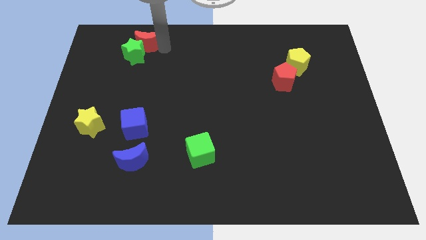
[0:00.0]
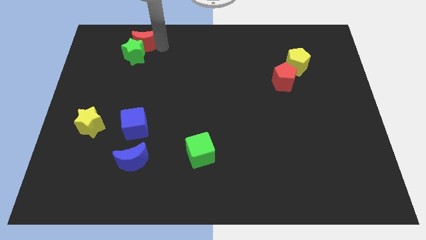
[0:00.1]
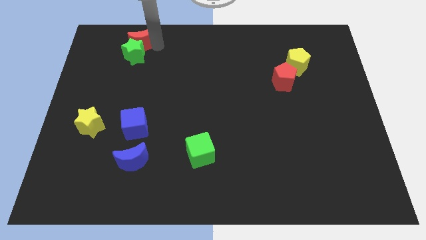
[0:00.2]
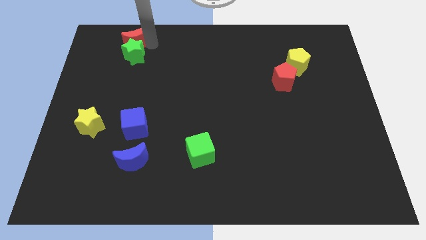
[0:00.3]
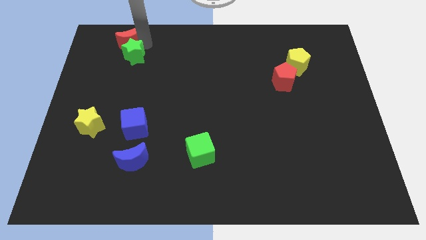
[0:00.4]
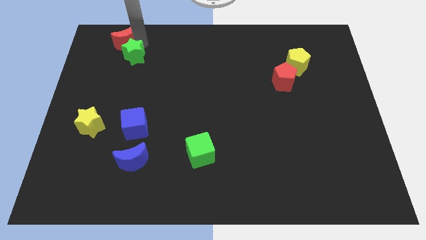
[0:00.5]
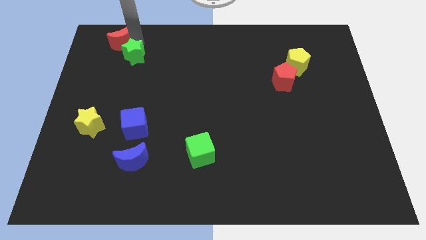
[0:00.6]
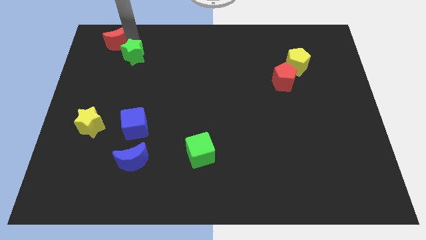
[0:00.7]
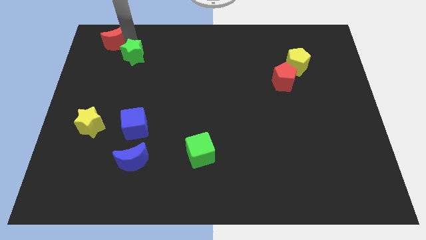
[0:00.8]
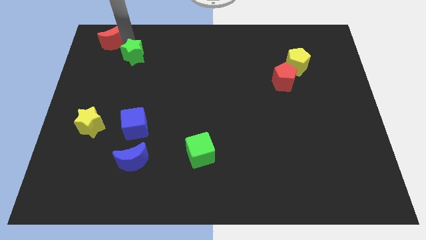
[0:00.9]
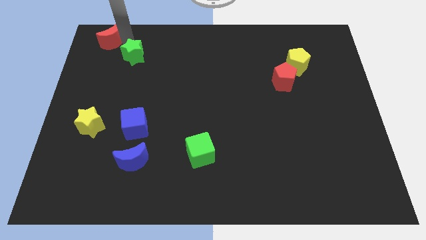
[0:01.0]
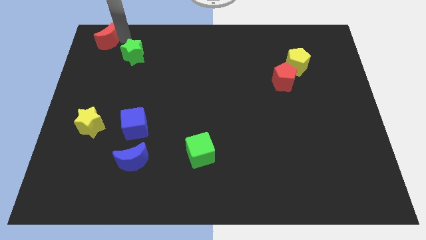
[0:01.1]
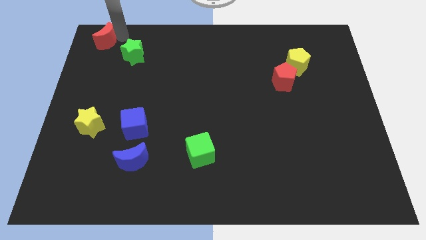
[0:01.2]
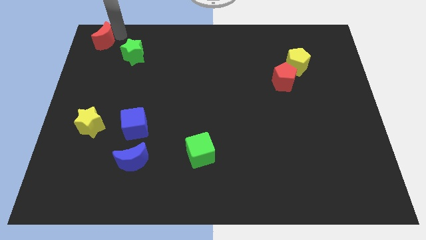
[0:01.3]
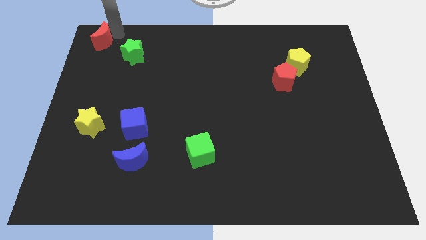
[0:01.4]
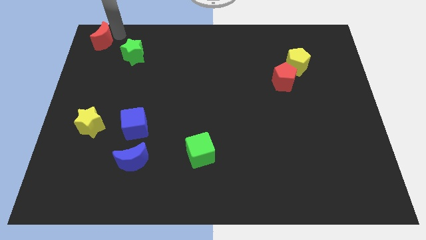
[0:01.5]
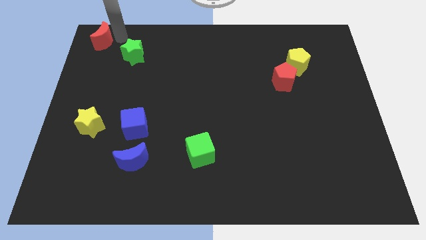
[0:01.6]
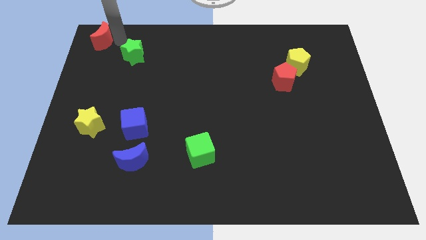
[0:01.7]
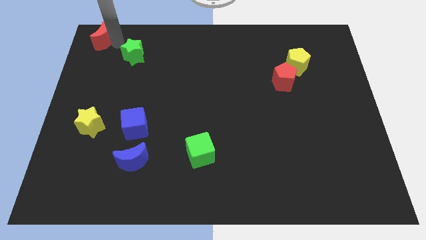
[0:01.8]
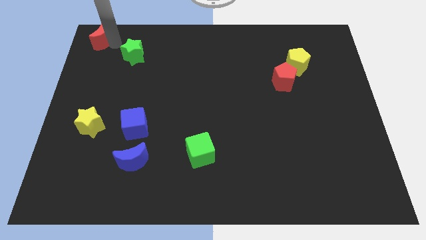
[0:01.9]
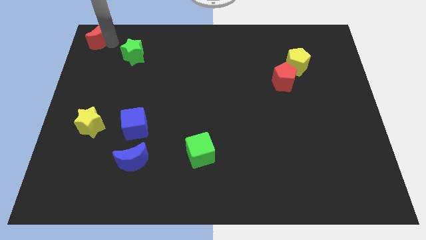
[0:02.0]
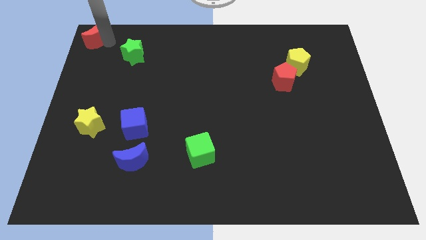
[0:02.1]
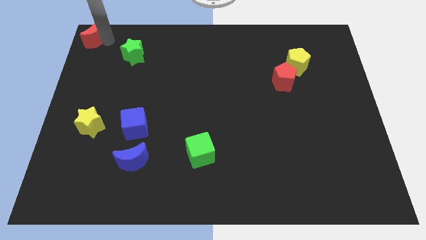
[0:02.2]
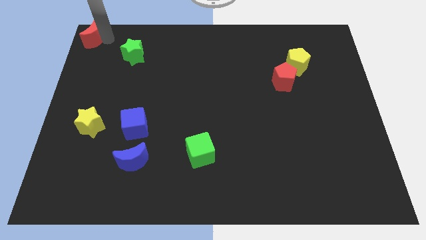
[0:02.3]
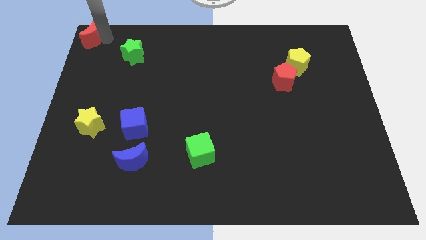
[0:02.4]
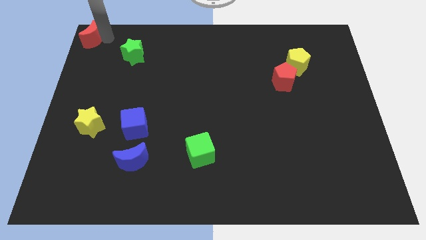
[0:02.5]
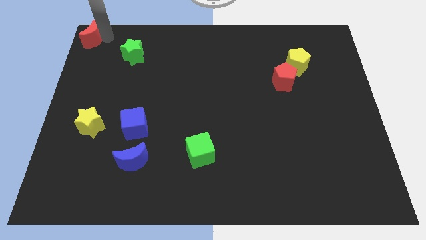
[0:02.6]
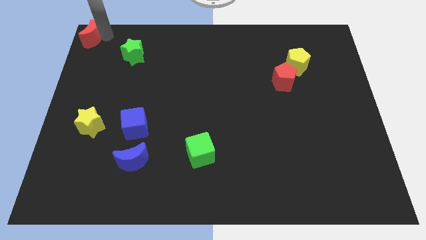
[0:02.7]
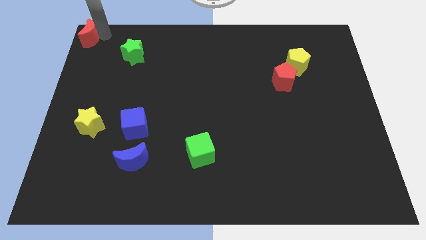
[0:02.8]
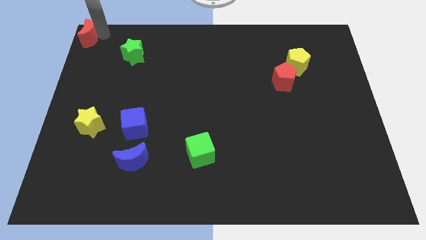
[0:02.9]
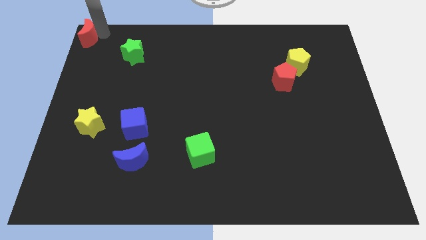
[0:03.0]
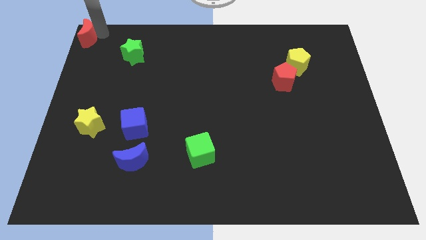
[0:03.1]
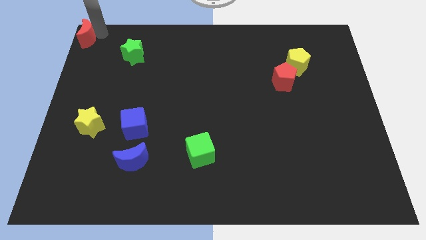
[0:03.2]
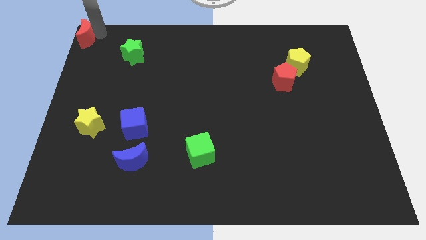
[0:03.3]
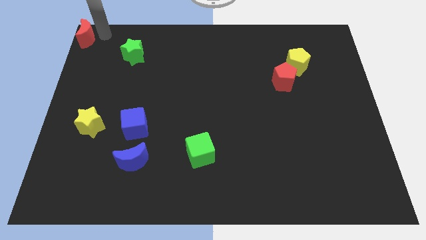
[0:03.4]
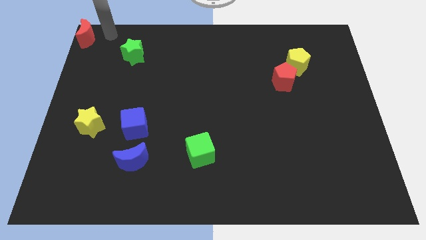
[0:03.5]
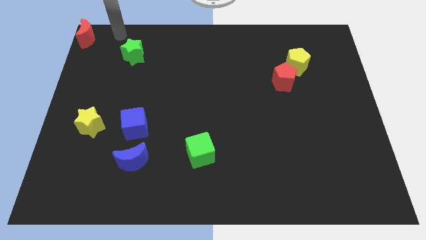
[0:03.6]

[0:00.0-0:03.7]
move the red crescent to the top left corner

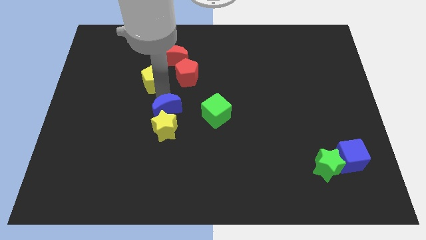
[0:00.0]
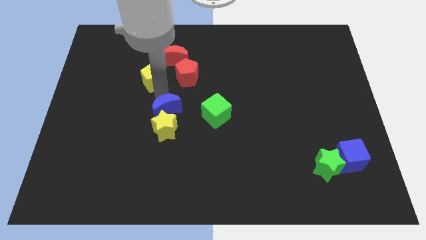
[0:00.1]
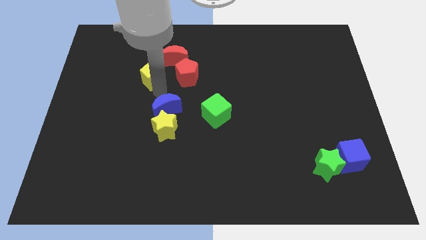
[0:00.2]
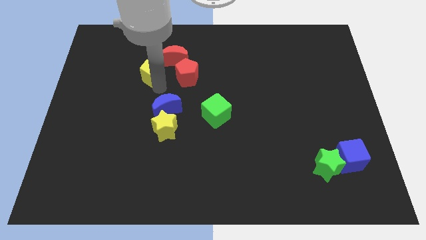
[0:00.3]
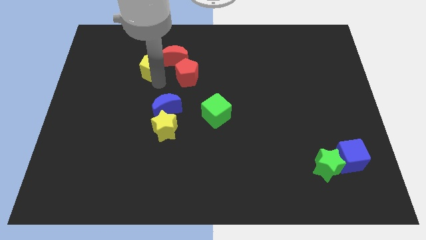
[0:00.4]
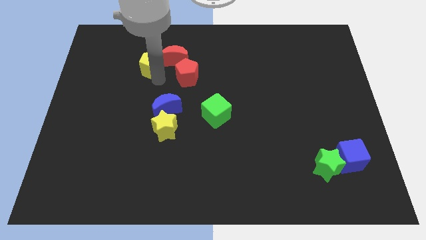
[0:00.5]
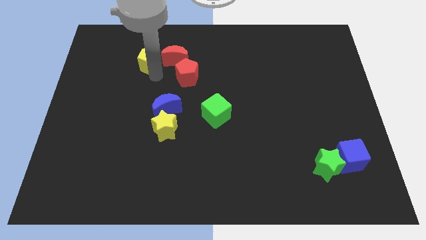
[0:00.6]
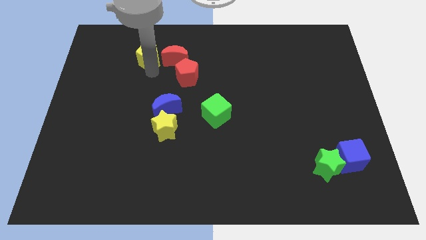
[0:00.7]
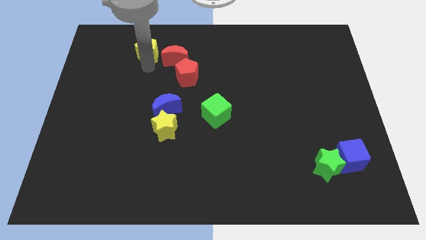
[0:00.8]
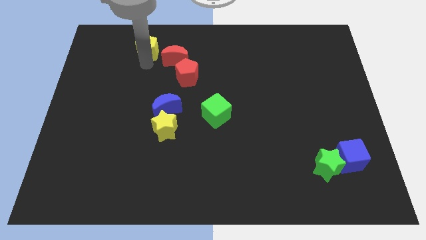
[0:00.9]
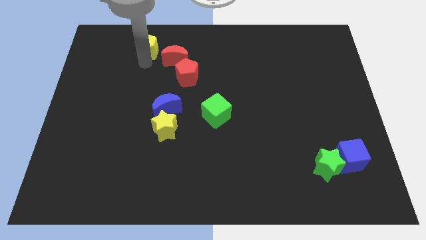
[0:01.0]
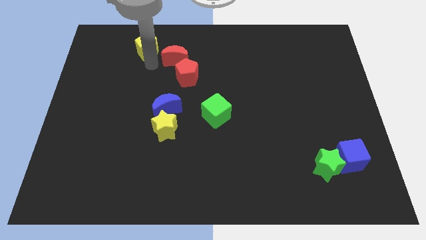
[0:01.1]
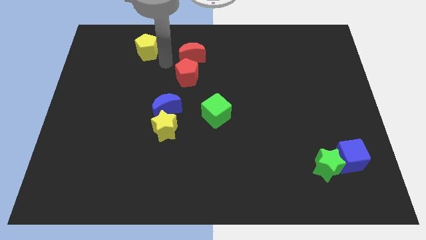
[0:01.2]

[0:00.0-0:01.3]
put the yellow pentagon at the top left side of the red moon

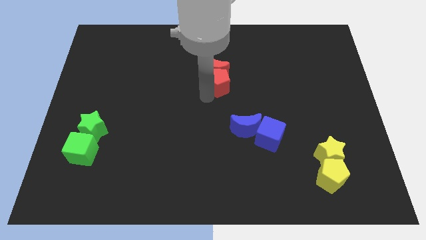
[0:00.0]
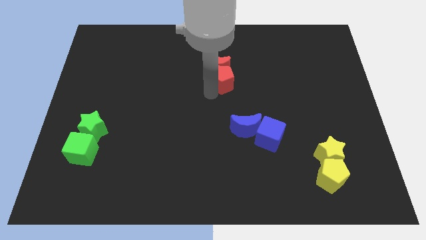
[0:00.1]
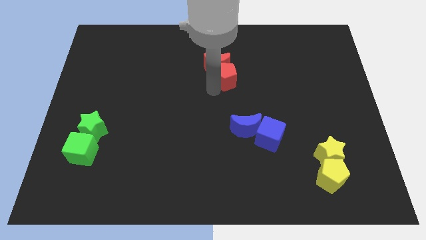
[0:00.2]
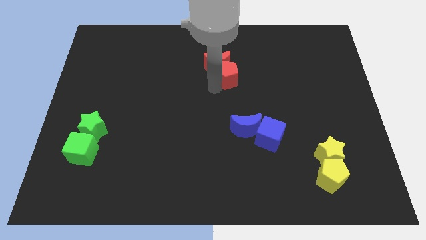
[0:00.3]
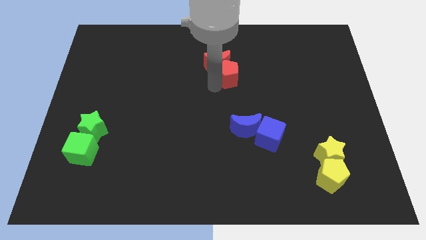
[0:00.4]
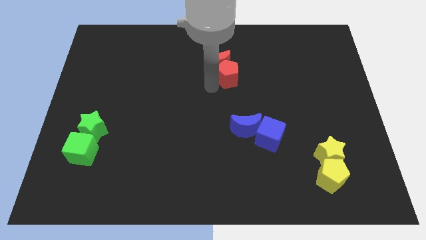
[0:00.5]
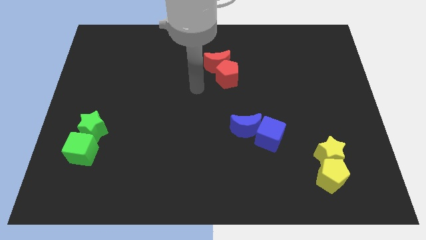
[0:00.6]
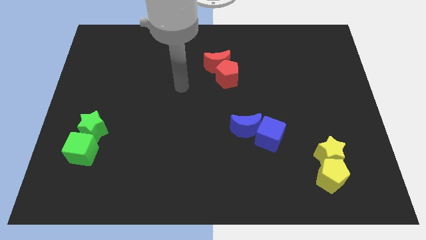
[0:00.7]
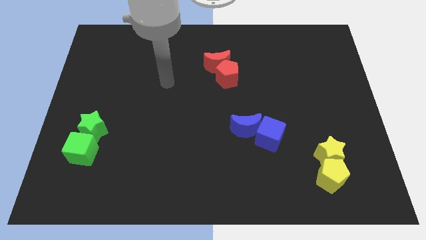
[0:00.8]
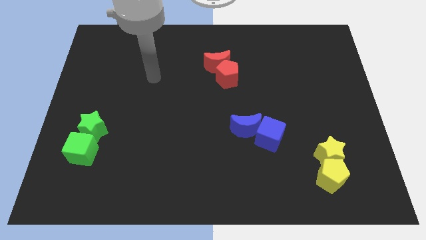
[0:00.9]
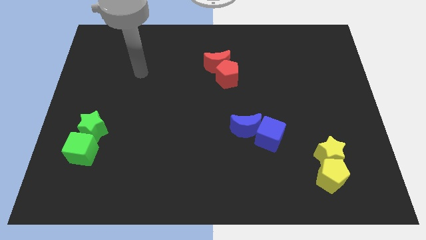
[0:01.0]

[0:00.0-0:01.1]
slightly push the red pentagon towards the top along with the red crescent

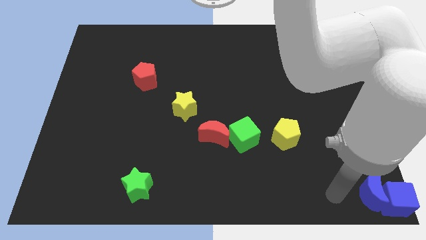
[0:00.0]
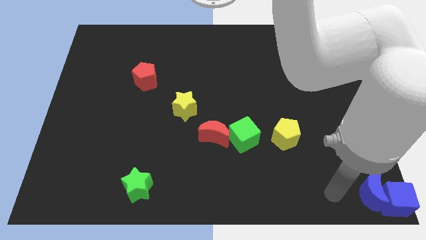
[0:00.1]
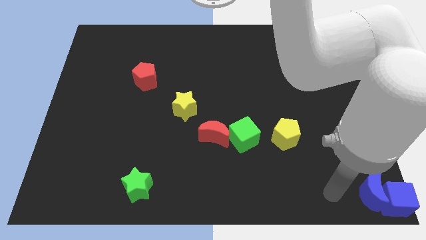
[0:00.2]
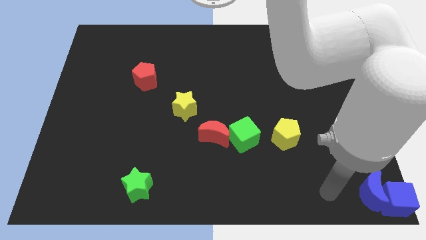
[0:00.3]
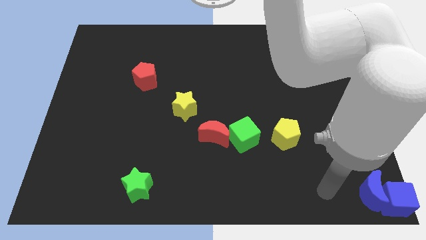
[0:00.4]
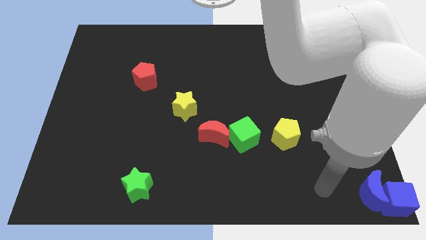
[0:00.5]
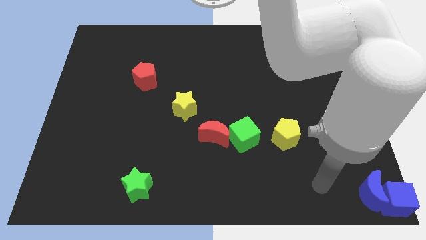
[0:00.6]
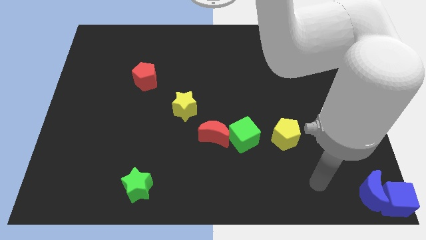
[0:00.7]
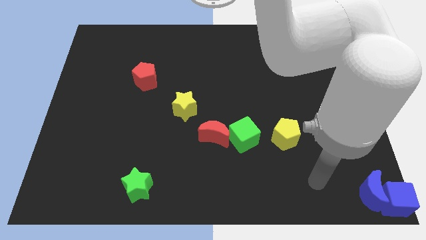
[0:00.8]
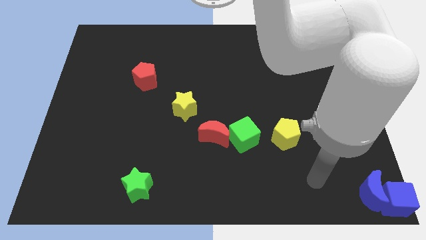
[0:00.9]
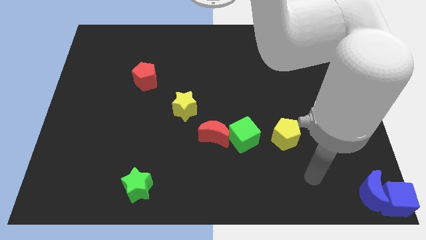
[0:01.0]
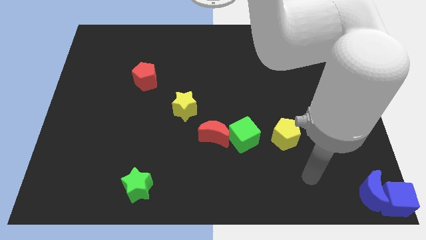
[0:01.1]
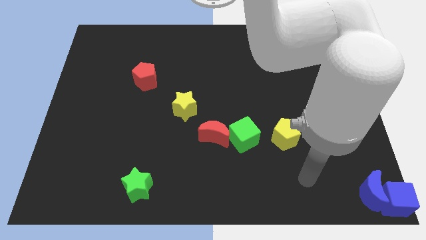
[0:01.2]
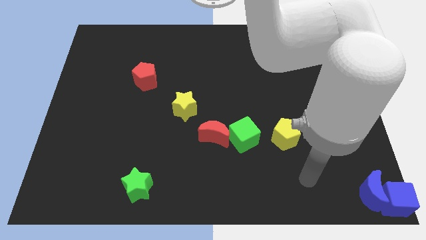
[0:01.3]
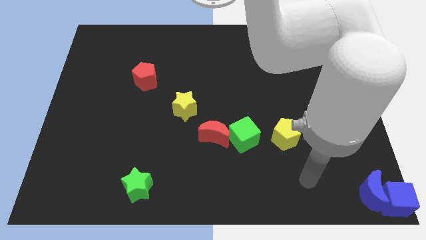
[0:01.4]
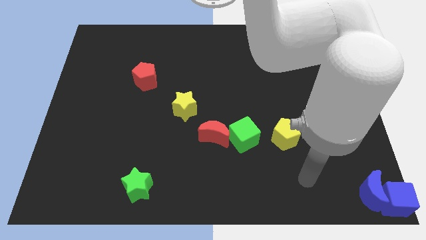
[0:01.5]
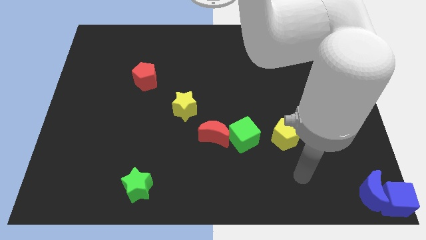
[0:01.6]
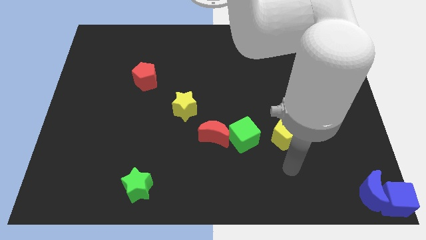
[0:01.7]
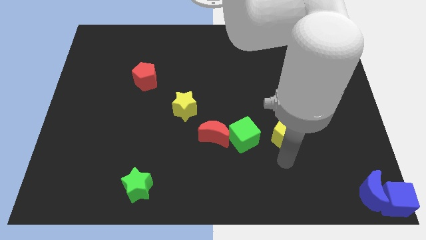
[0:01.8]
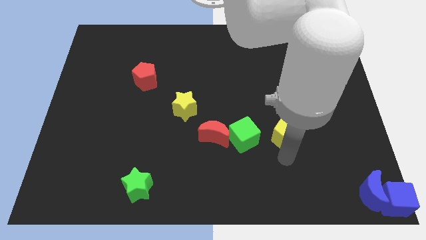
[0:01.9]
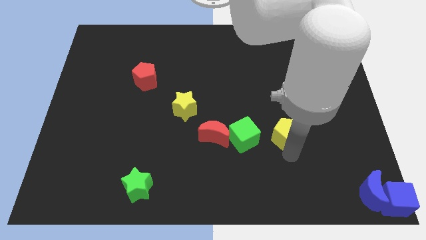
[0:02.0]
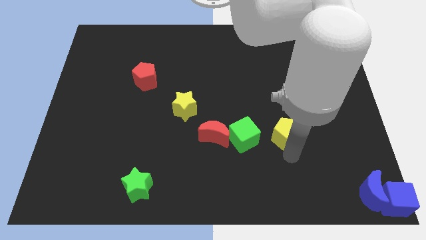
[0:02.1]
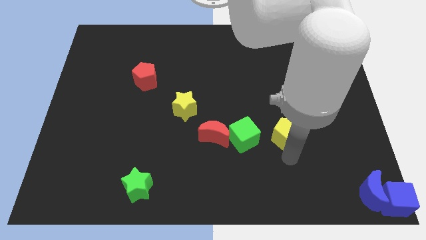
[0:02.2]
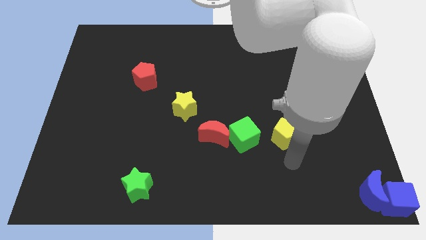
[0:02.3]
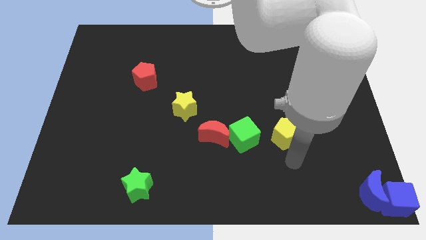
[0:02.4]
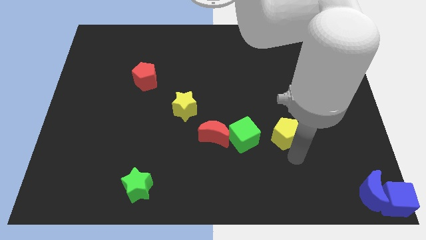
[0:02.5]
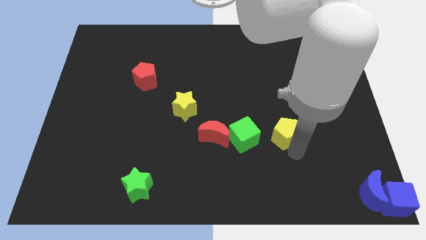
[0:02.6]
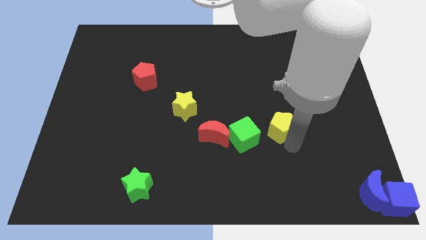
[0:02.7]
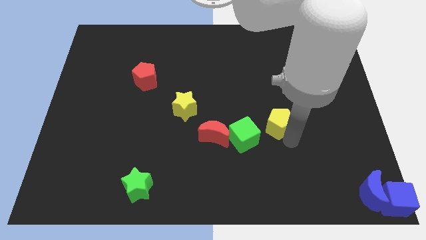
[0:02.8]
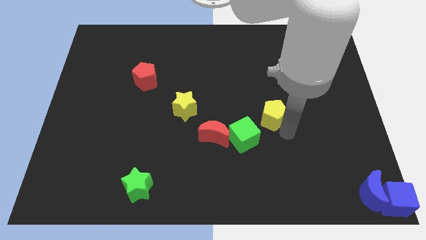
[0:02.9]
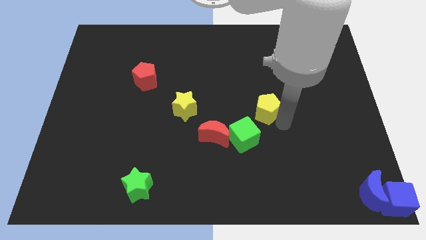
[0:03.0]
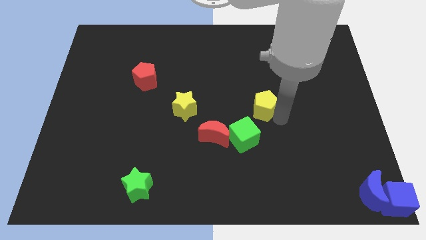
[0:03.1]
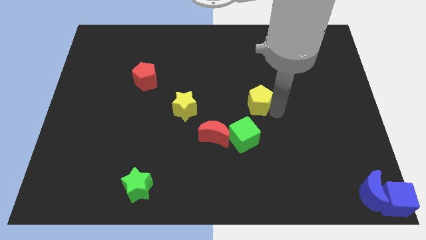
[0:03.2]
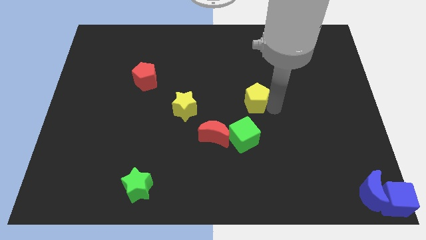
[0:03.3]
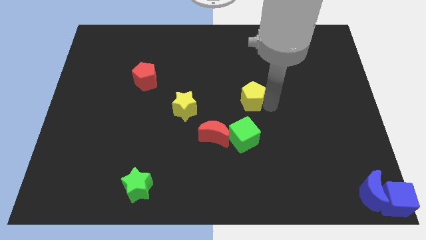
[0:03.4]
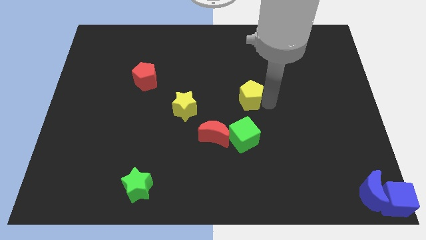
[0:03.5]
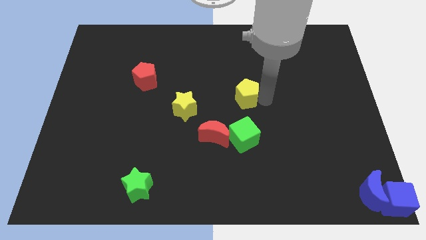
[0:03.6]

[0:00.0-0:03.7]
push the yellow pentagon to the top of the green cube
